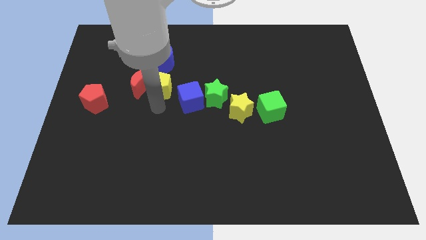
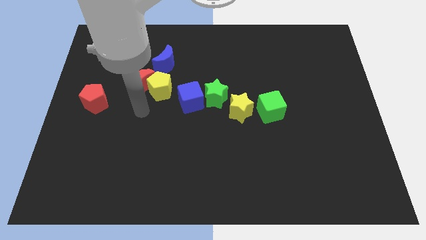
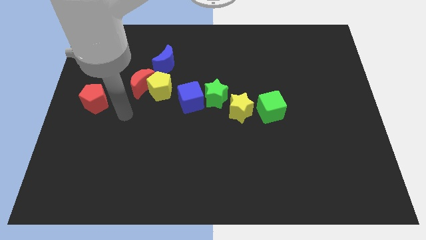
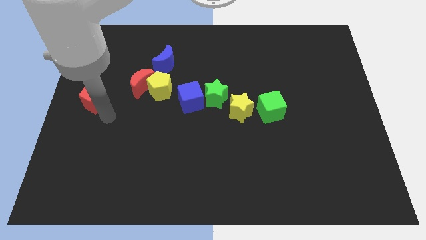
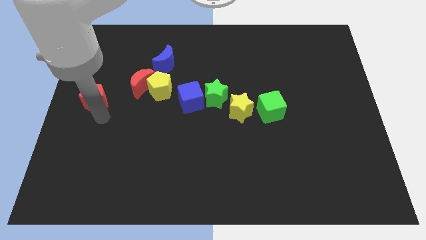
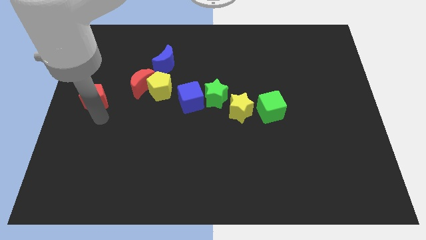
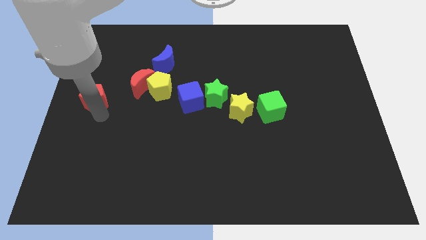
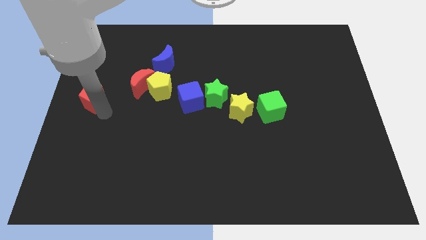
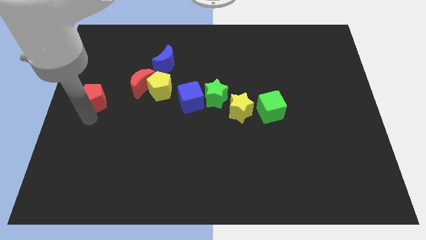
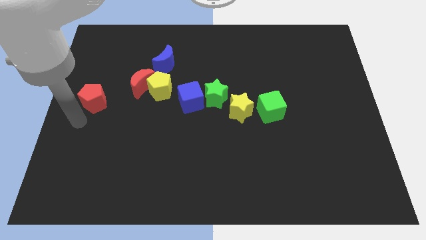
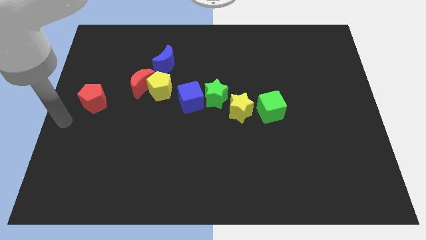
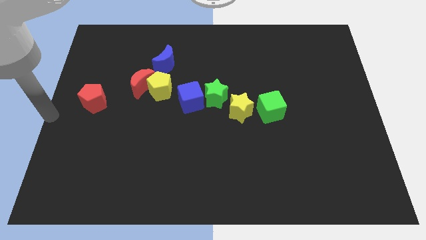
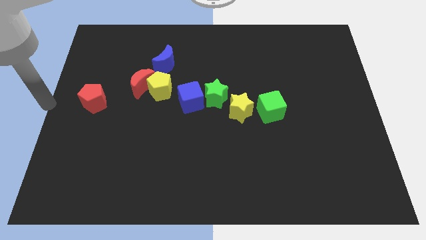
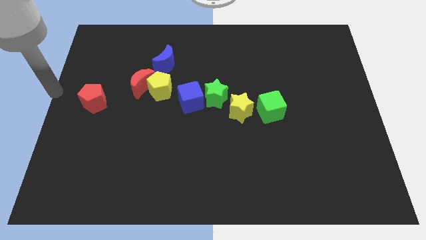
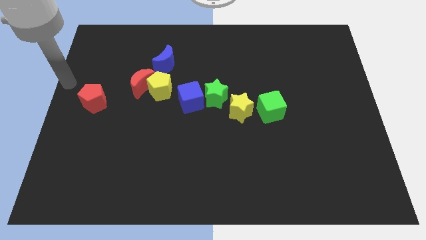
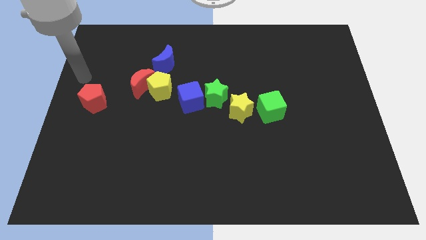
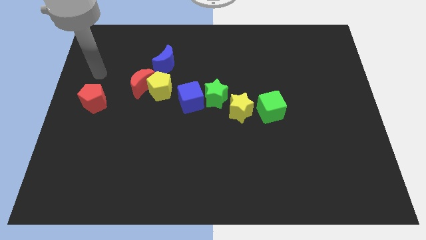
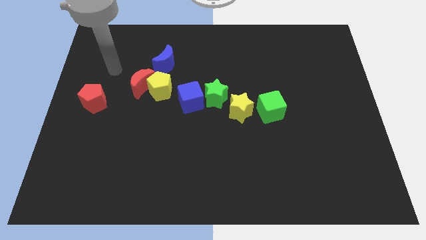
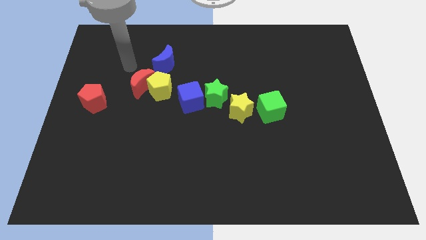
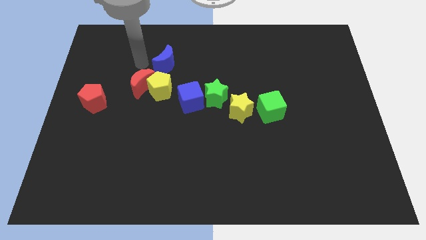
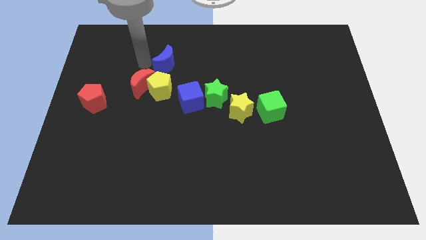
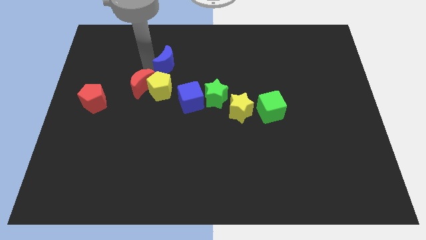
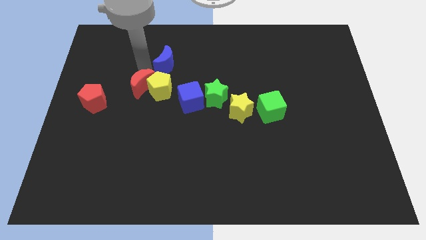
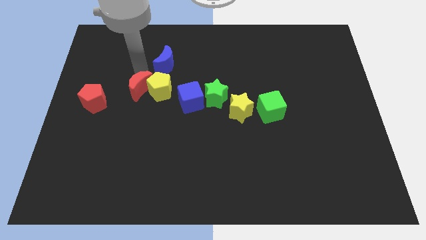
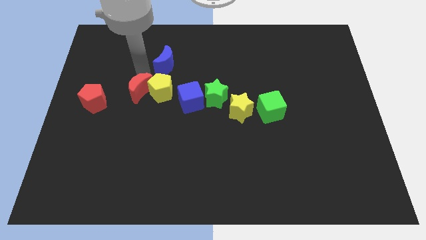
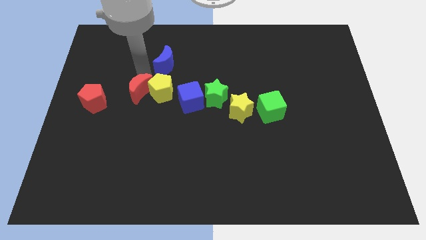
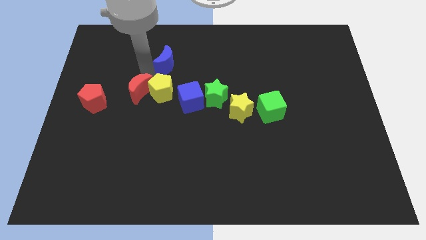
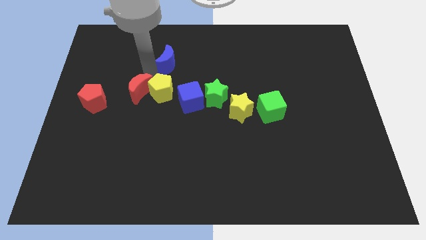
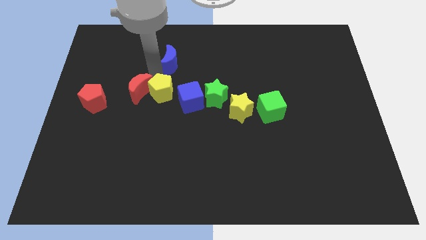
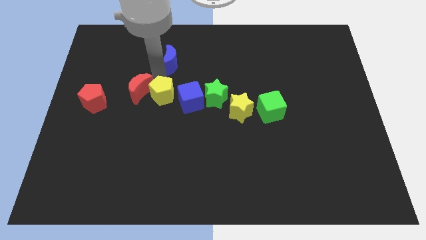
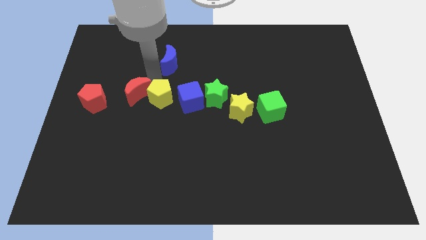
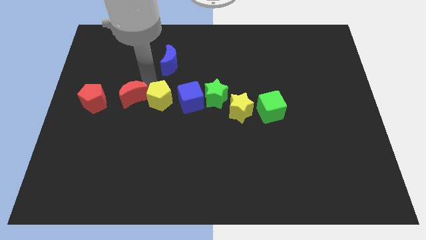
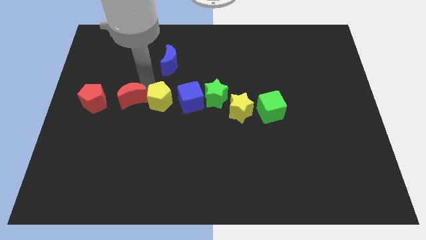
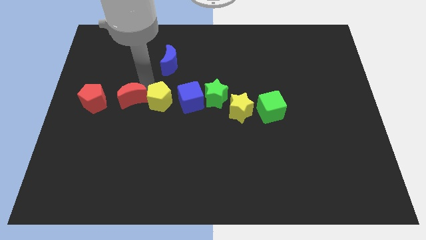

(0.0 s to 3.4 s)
adjust red crescent and yellow pentagon to form a line

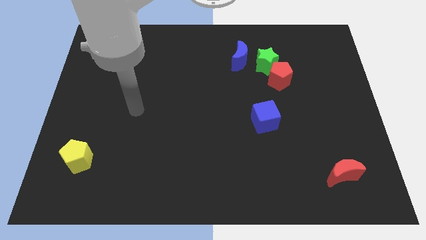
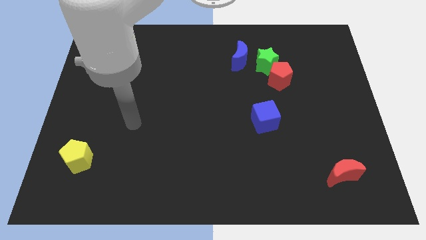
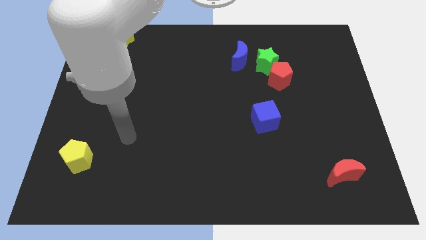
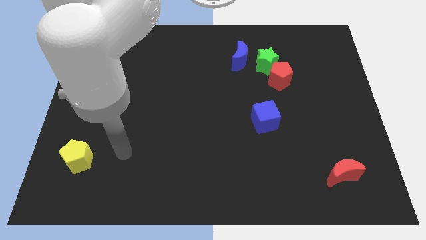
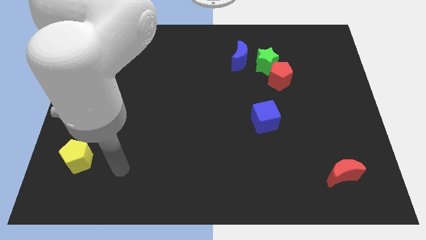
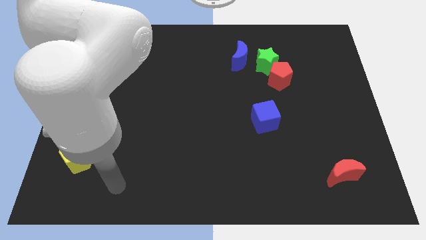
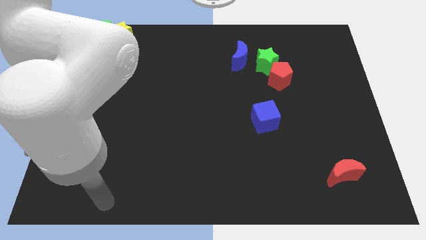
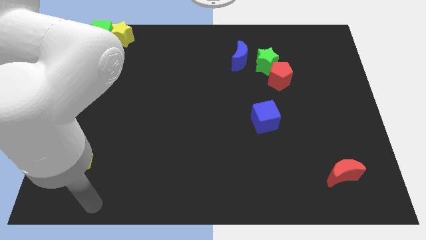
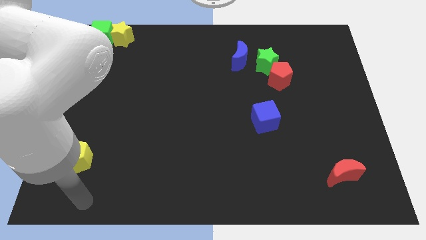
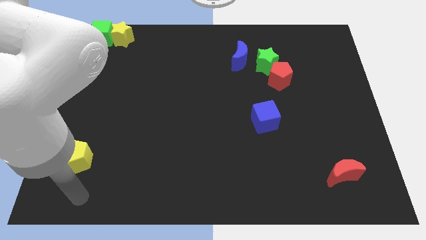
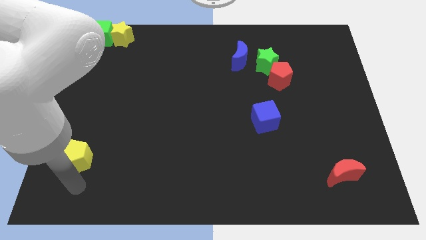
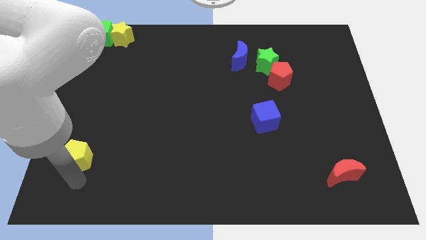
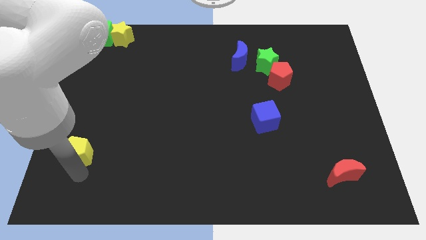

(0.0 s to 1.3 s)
touch the bottom side of the yellow pentagon

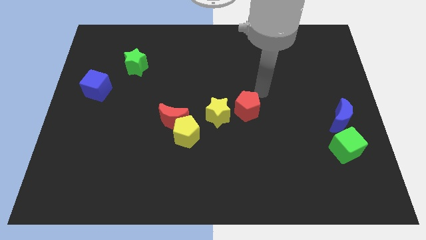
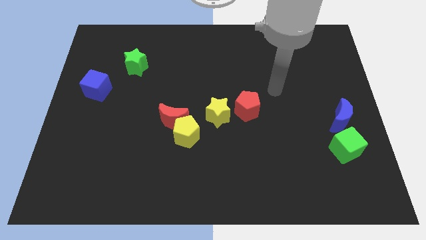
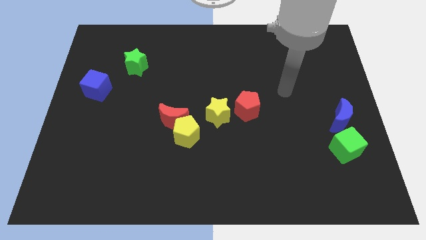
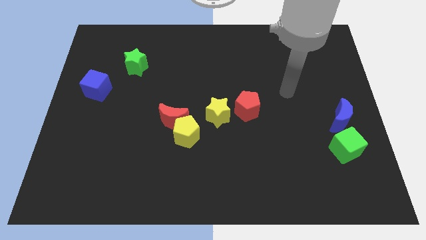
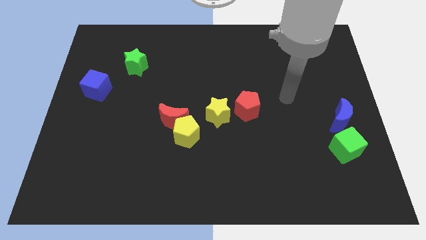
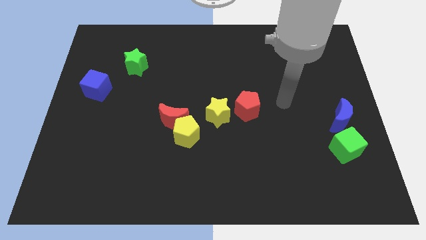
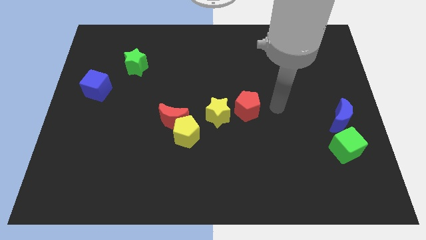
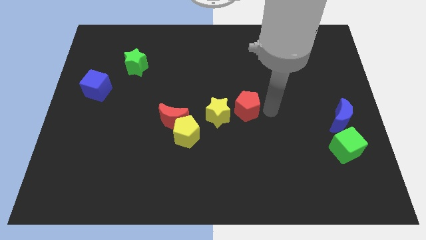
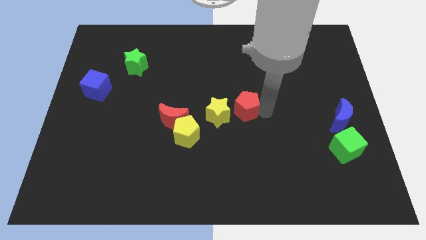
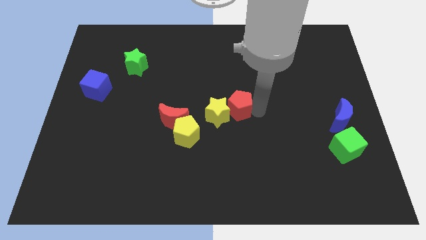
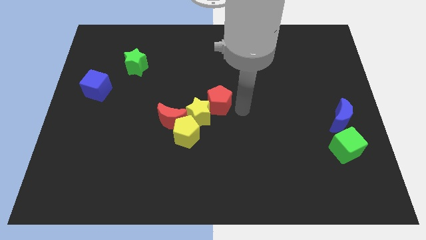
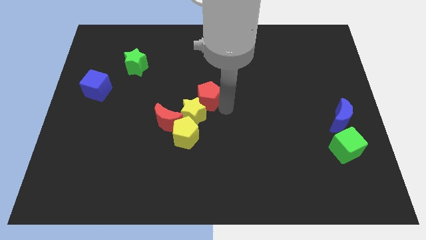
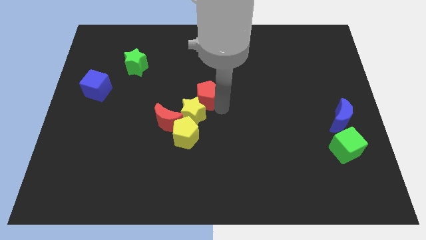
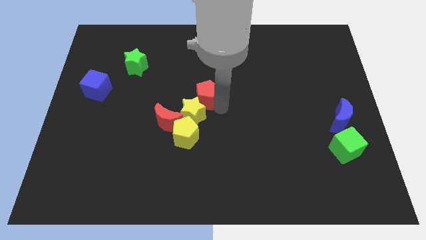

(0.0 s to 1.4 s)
slide the red pentagon into the yellow star

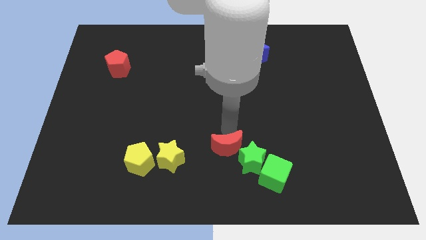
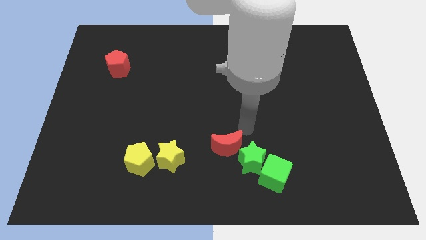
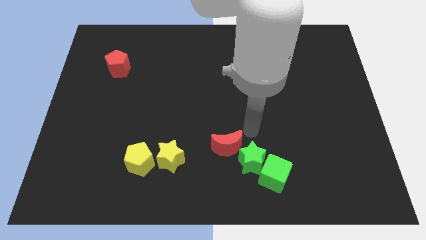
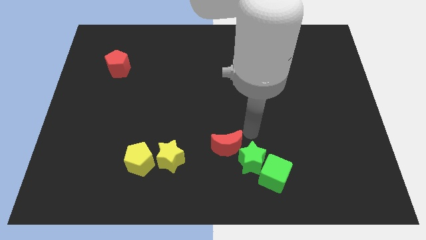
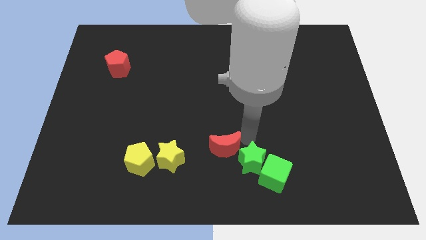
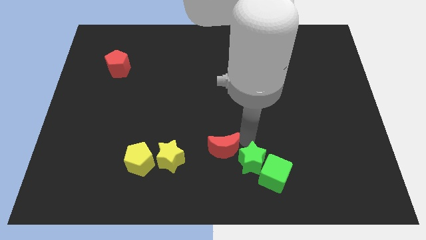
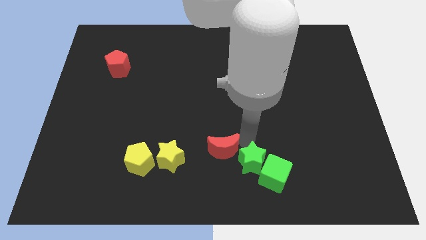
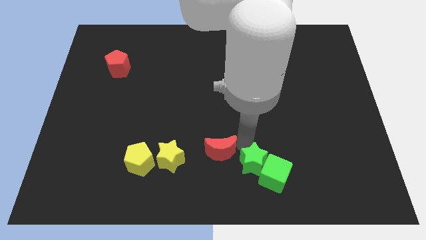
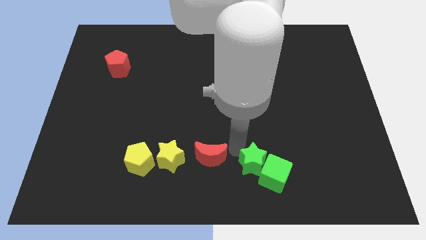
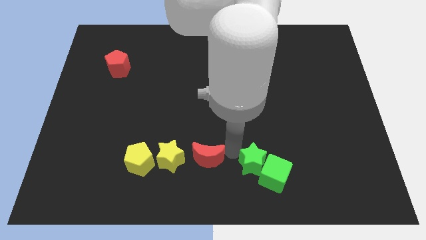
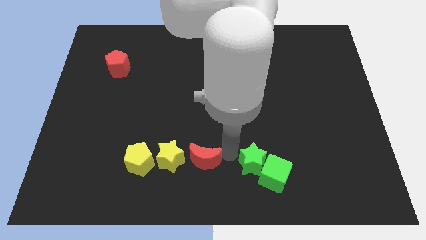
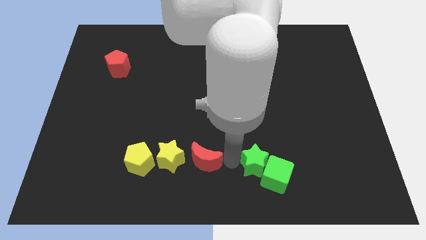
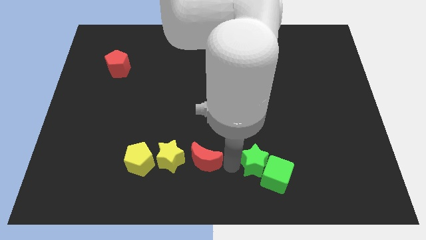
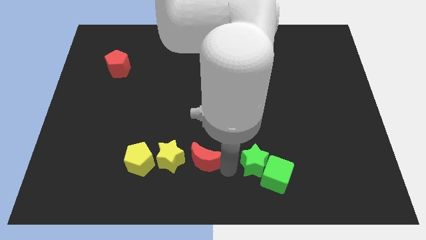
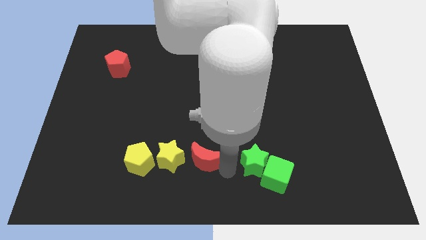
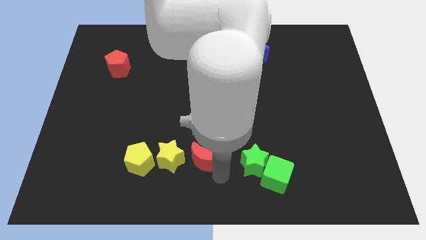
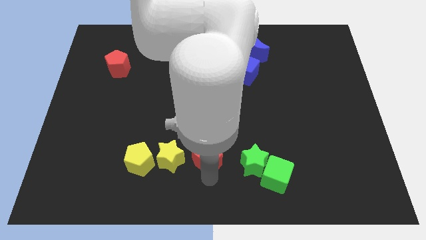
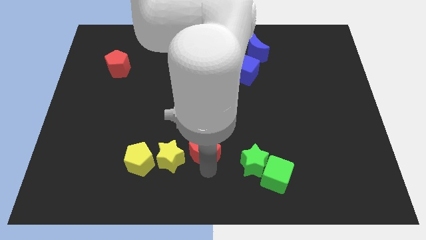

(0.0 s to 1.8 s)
separate the red crescent from green star

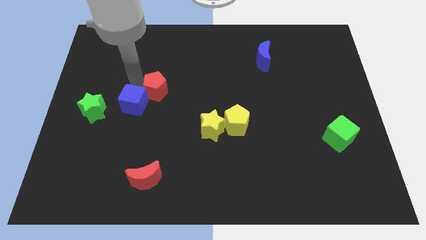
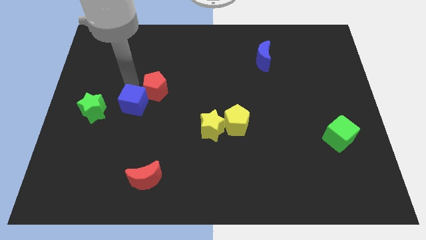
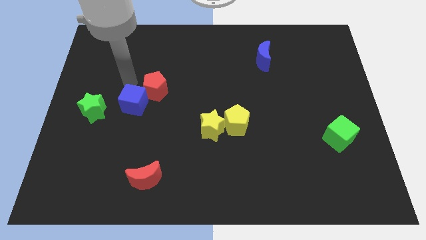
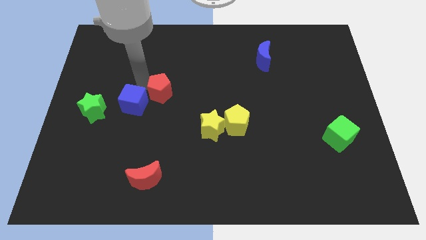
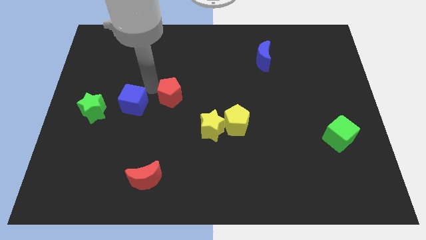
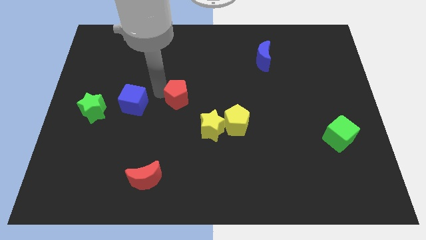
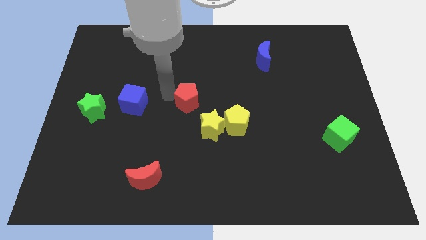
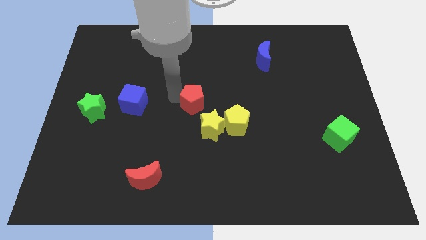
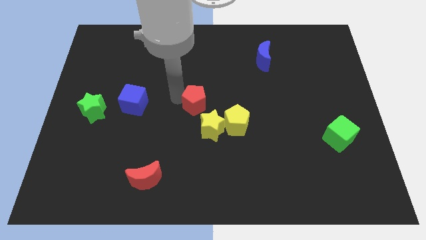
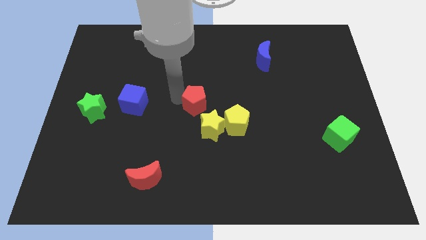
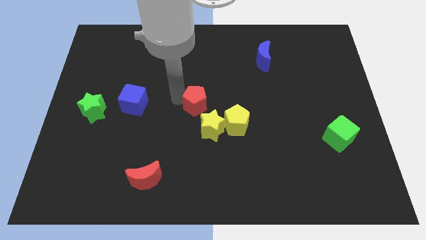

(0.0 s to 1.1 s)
slide the red pentagon towards the center of the board
